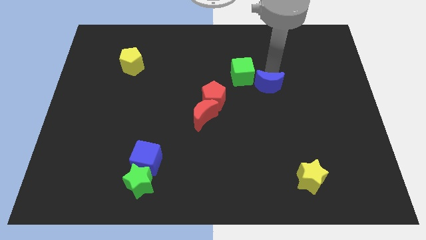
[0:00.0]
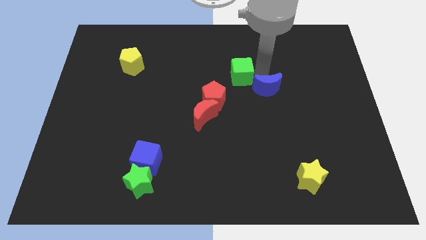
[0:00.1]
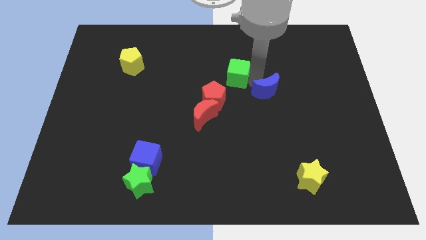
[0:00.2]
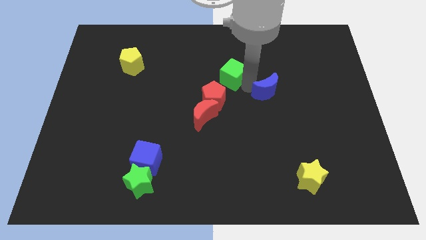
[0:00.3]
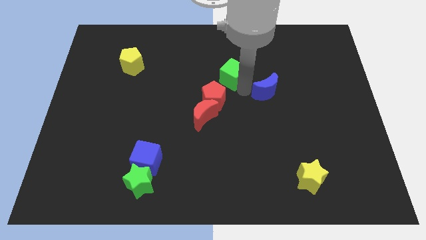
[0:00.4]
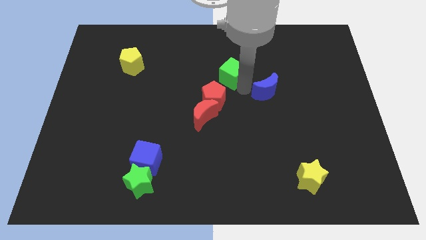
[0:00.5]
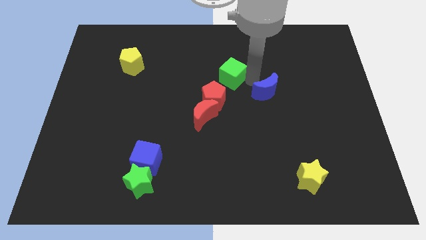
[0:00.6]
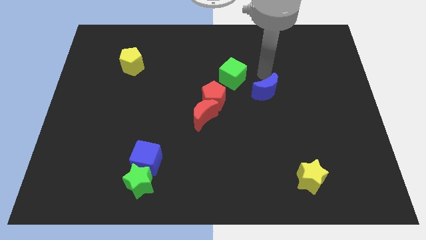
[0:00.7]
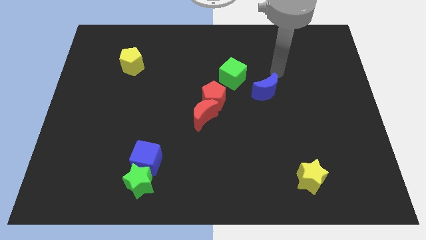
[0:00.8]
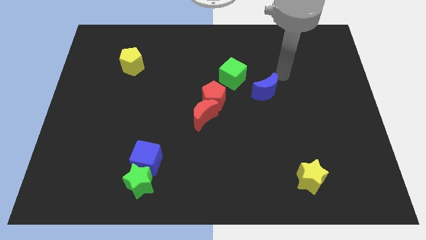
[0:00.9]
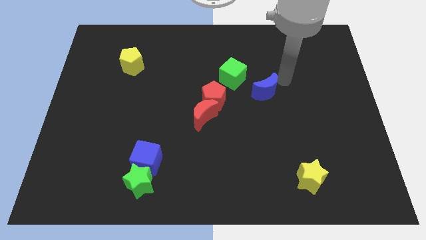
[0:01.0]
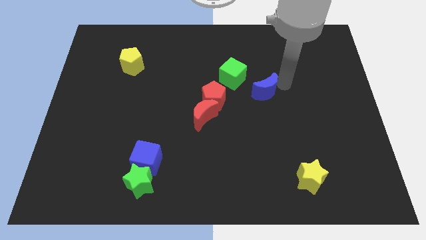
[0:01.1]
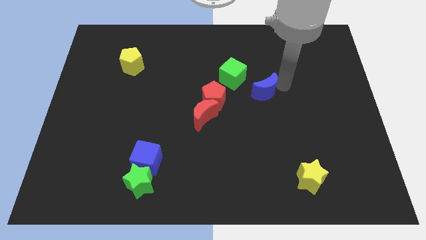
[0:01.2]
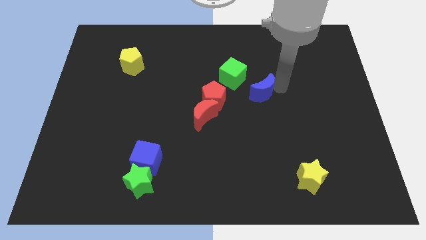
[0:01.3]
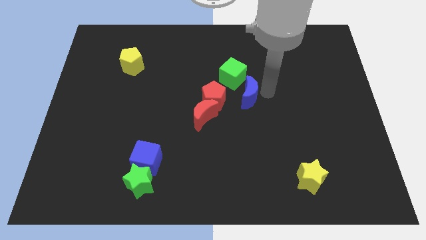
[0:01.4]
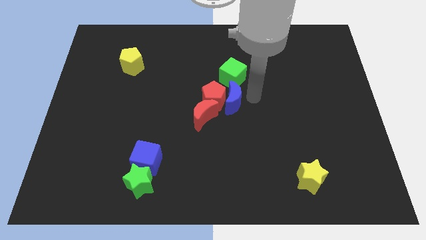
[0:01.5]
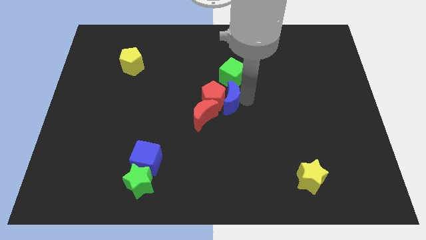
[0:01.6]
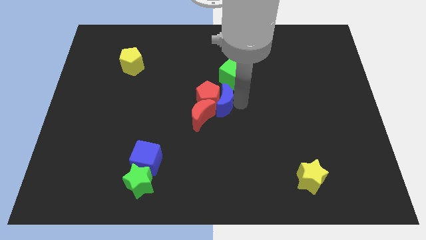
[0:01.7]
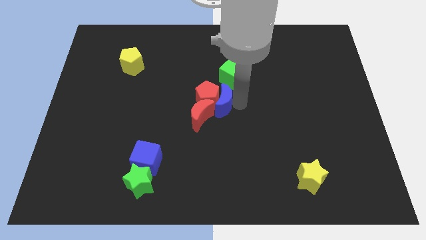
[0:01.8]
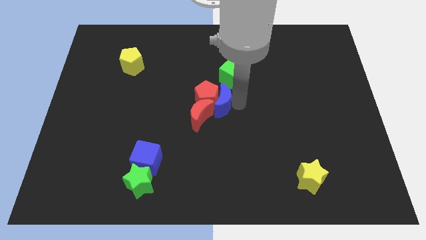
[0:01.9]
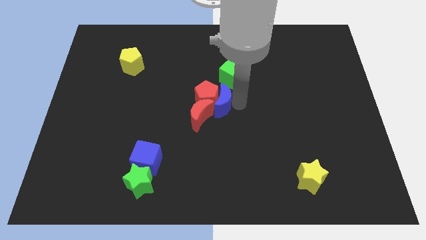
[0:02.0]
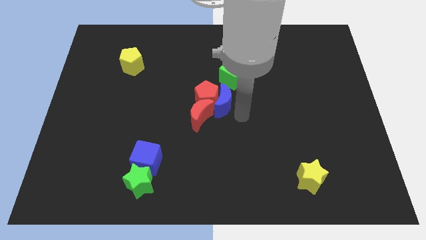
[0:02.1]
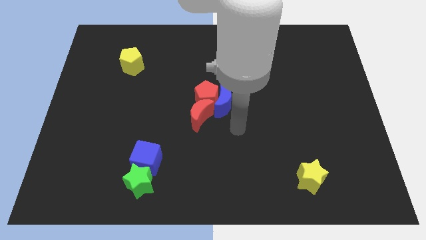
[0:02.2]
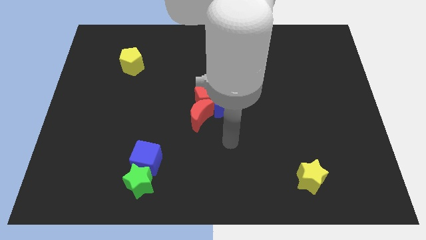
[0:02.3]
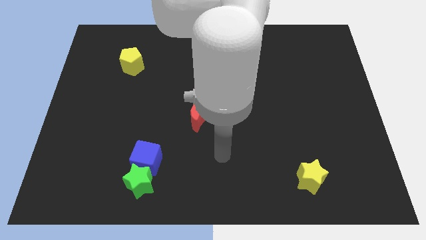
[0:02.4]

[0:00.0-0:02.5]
separate the green cube and blue moon

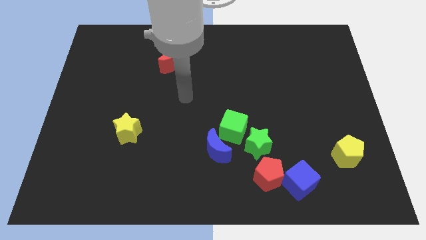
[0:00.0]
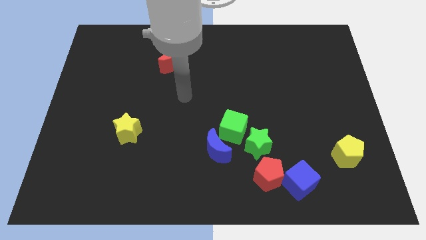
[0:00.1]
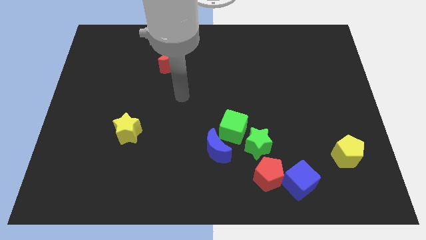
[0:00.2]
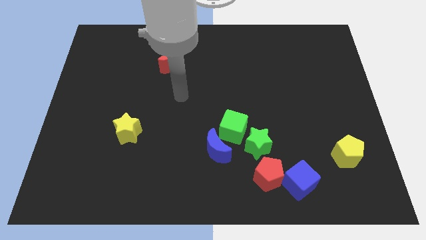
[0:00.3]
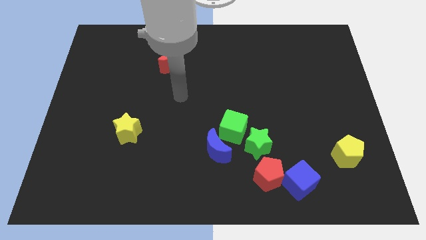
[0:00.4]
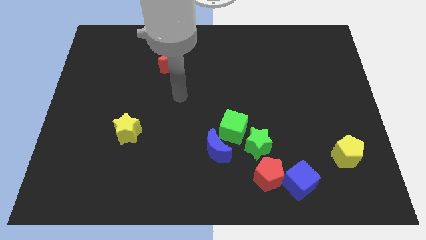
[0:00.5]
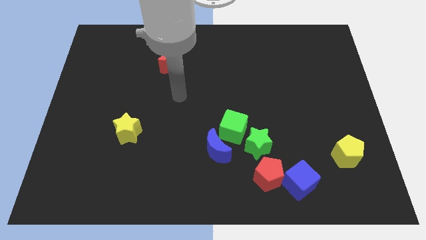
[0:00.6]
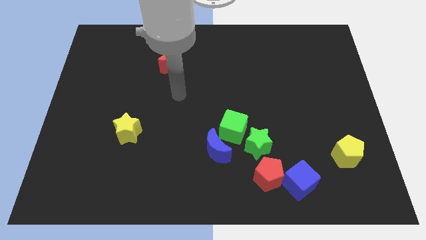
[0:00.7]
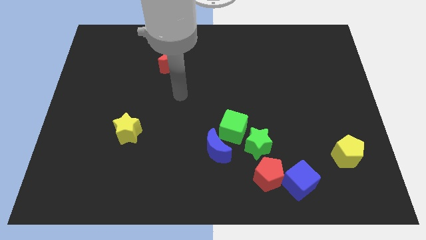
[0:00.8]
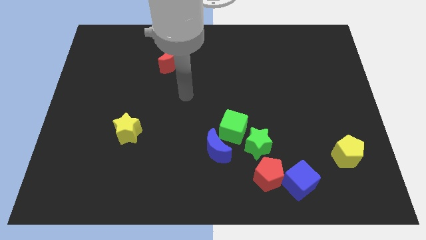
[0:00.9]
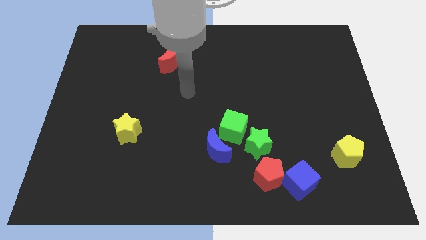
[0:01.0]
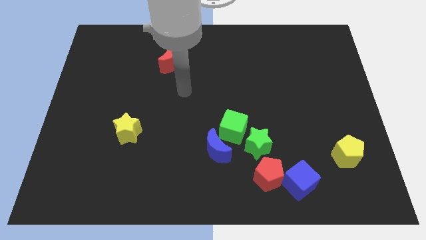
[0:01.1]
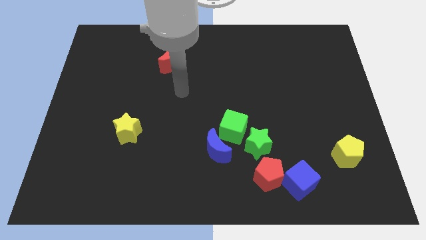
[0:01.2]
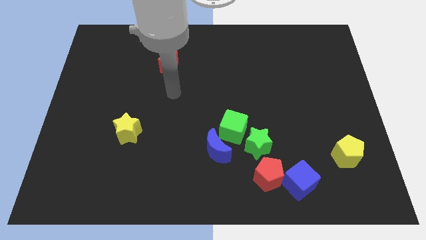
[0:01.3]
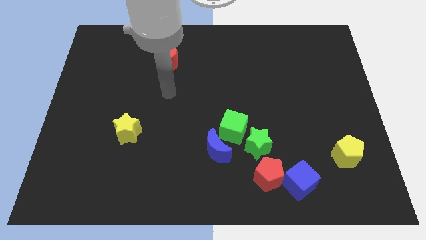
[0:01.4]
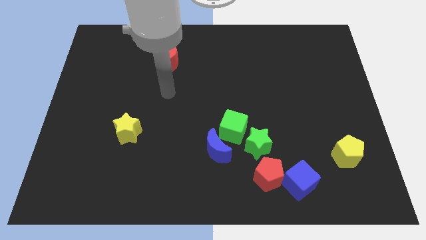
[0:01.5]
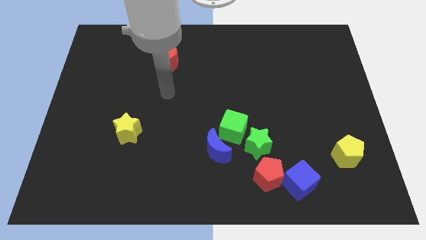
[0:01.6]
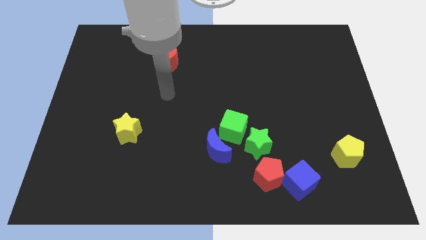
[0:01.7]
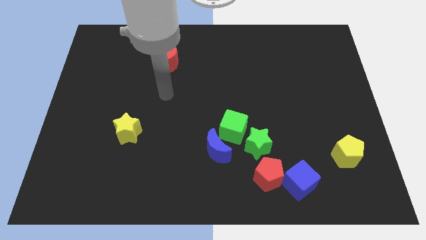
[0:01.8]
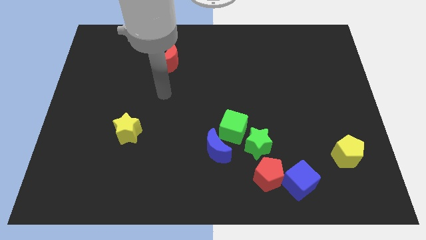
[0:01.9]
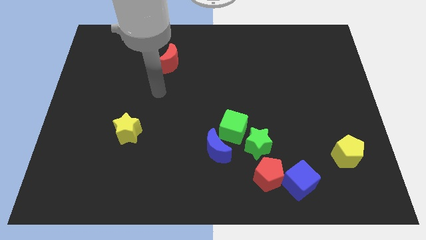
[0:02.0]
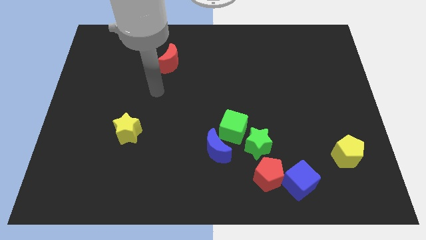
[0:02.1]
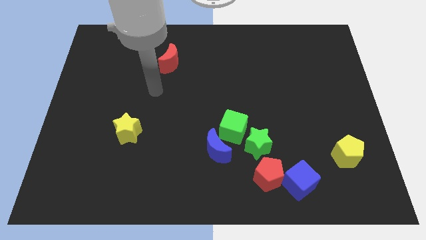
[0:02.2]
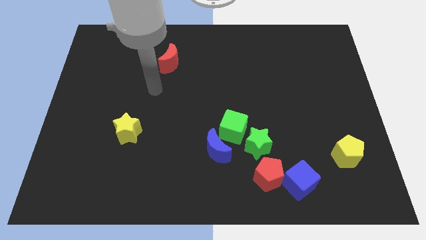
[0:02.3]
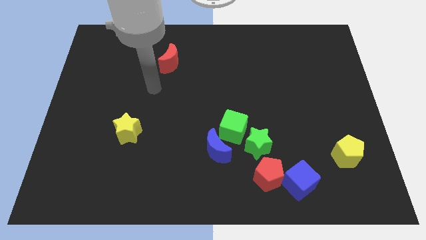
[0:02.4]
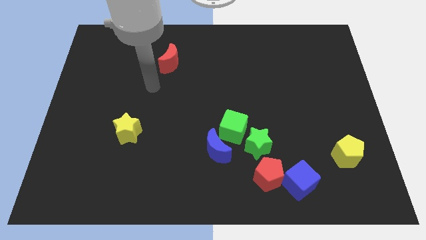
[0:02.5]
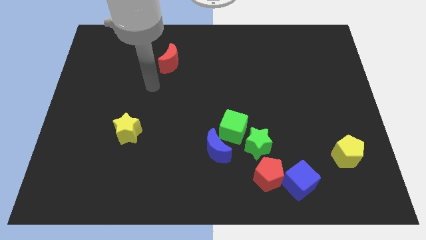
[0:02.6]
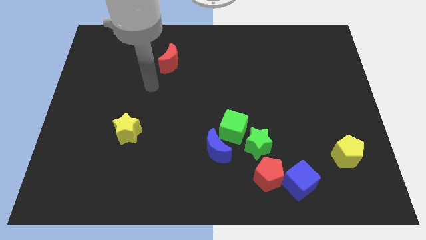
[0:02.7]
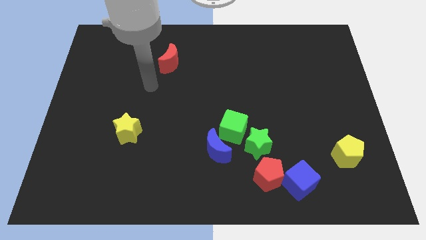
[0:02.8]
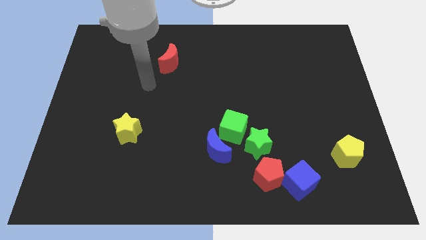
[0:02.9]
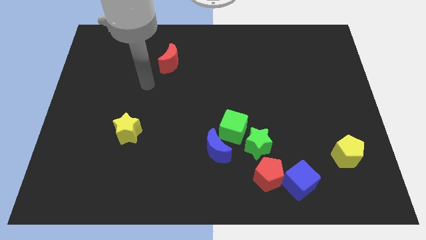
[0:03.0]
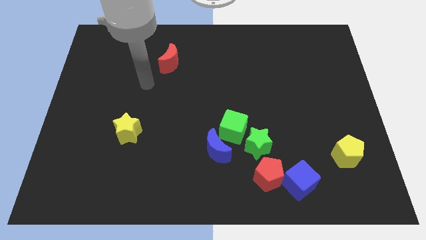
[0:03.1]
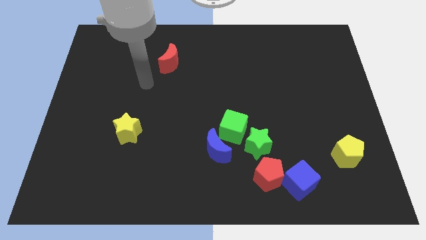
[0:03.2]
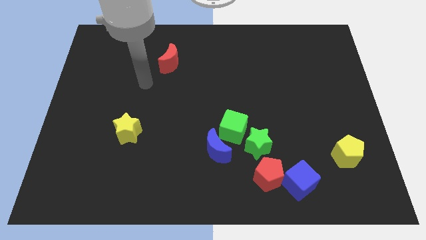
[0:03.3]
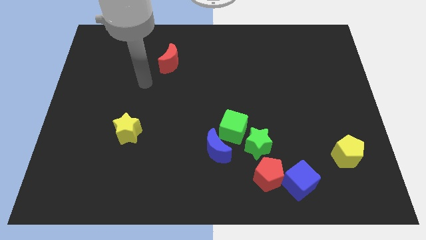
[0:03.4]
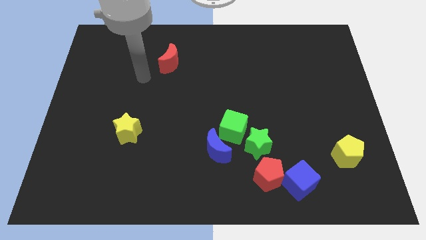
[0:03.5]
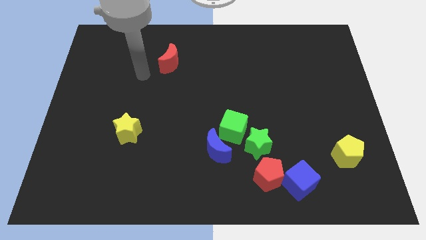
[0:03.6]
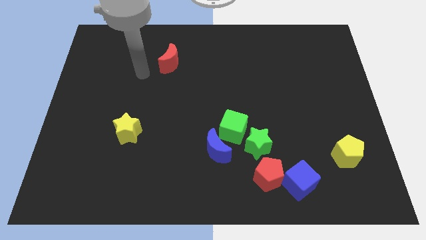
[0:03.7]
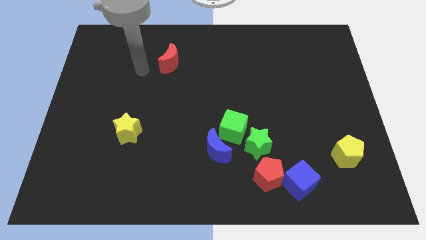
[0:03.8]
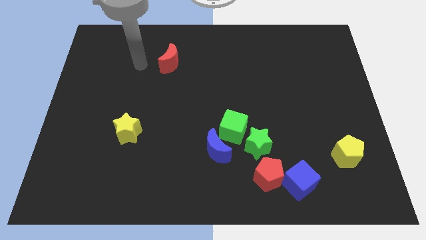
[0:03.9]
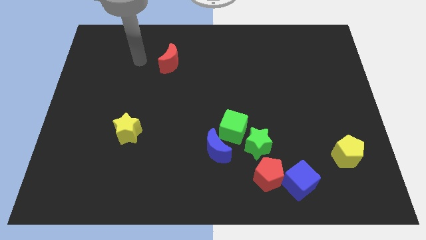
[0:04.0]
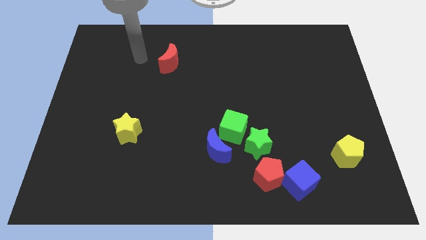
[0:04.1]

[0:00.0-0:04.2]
move the arm to the left of the red crescent

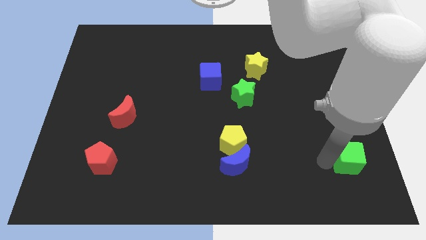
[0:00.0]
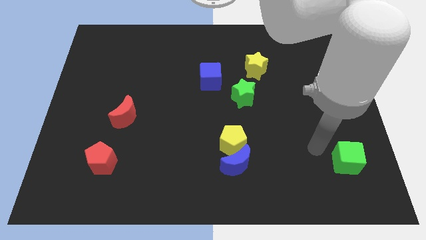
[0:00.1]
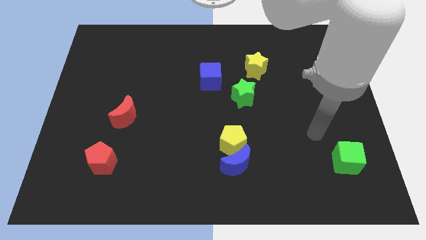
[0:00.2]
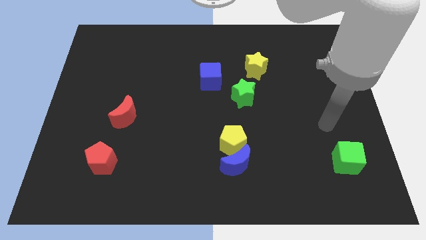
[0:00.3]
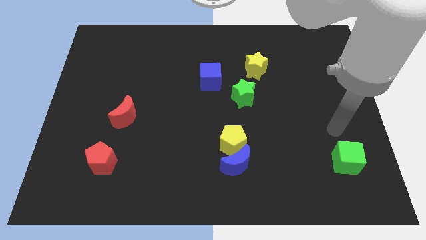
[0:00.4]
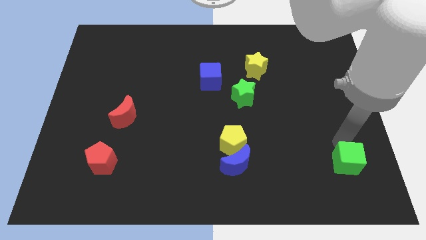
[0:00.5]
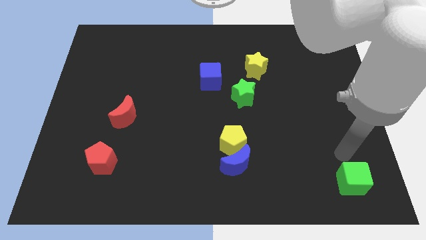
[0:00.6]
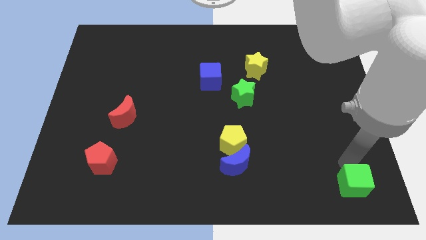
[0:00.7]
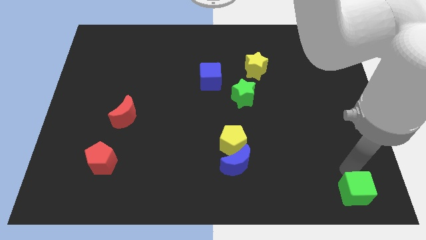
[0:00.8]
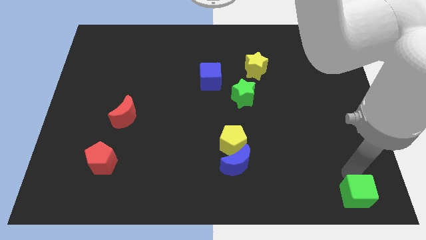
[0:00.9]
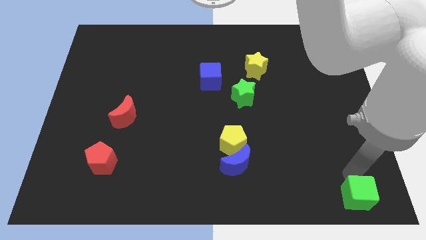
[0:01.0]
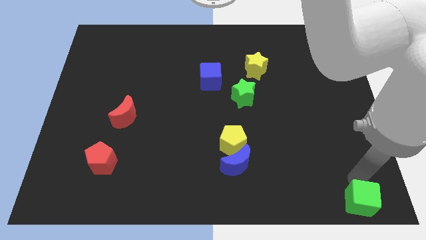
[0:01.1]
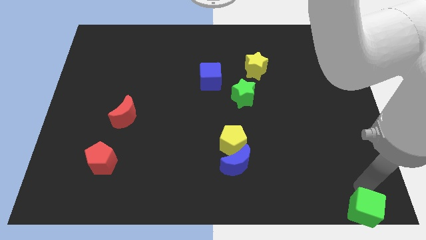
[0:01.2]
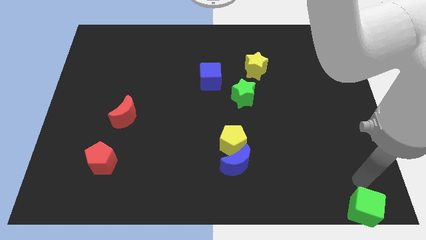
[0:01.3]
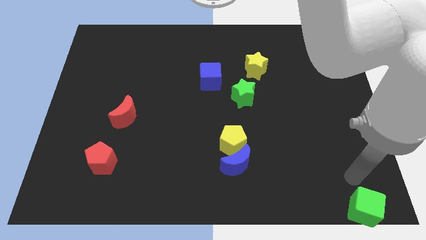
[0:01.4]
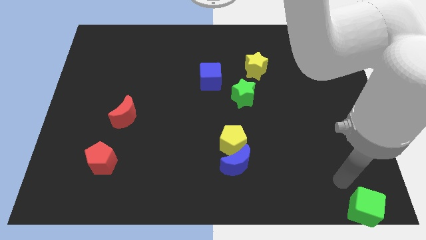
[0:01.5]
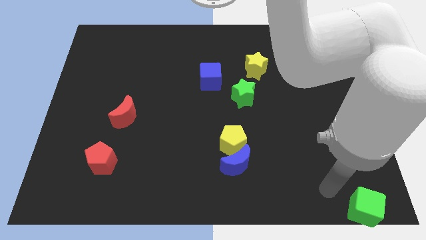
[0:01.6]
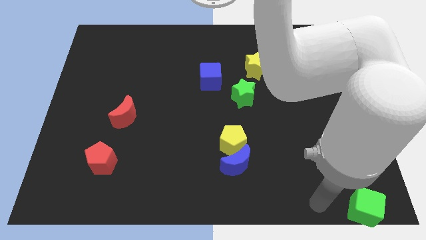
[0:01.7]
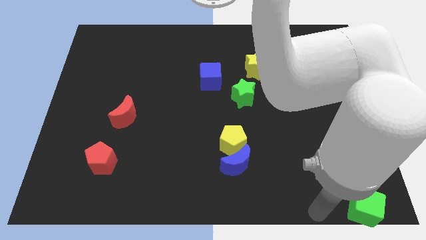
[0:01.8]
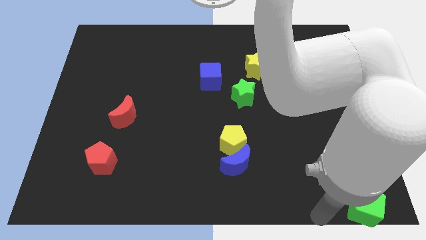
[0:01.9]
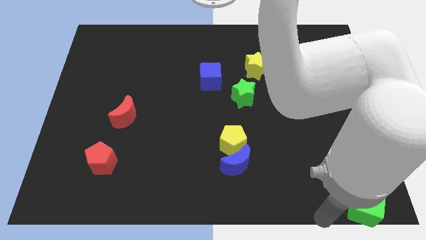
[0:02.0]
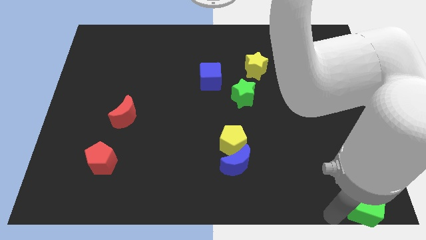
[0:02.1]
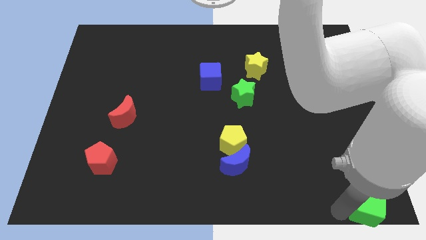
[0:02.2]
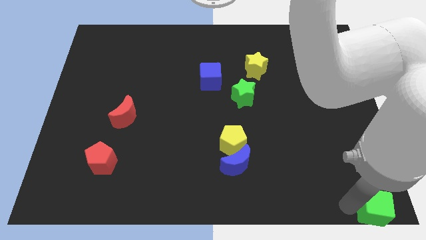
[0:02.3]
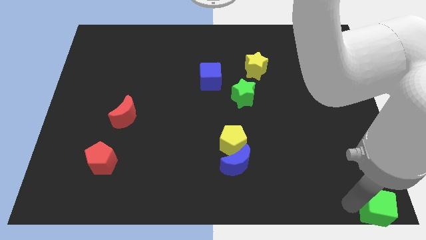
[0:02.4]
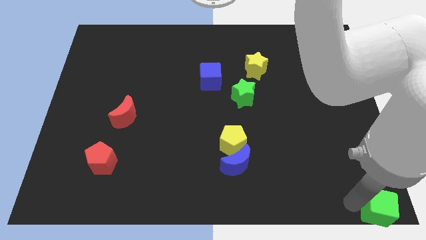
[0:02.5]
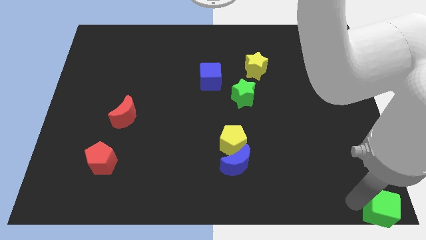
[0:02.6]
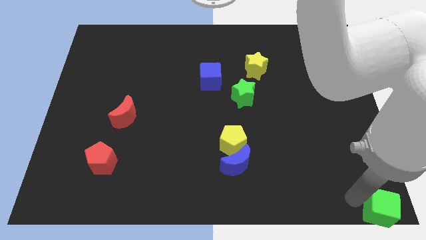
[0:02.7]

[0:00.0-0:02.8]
move the green cube to the bottom right corner
